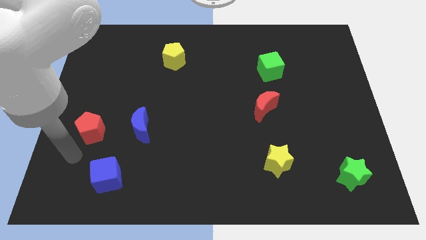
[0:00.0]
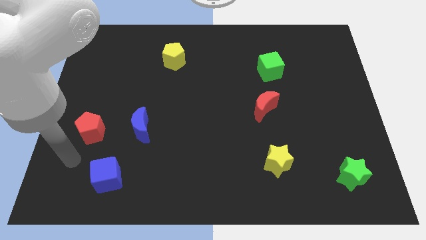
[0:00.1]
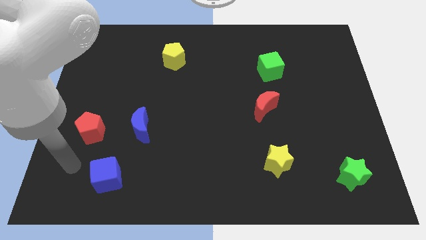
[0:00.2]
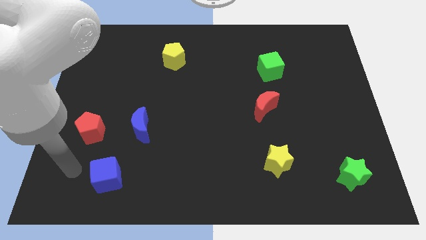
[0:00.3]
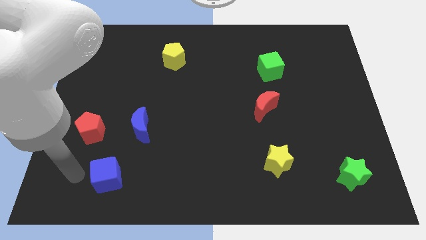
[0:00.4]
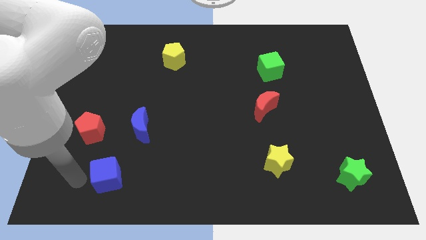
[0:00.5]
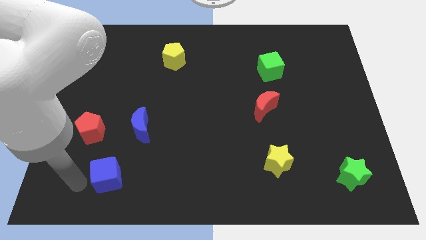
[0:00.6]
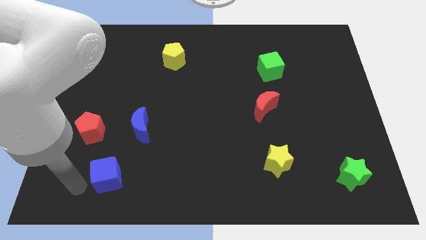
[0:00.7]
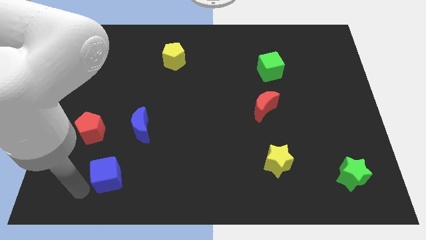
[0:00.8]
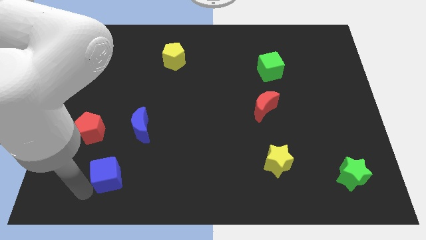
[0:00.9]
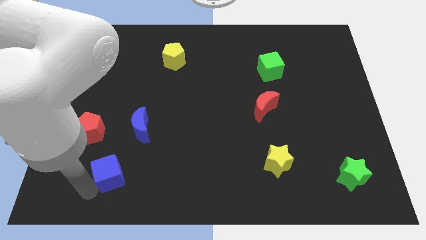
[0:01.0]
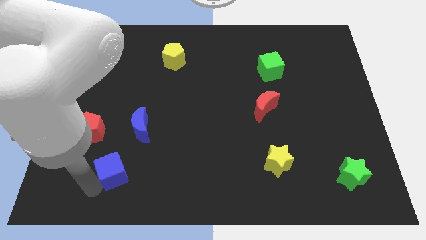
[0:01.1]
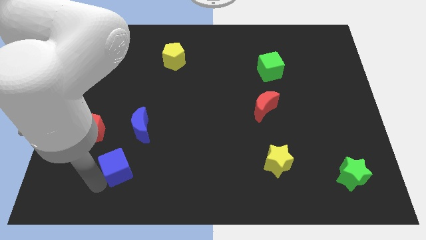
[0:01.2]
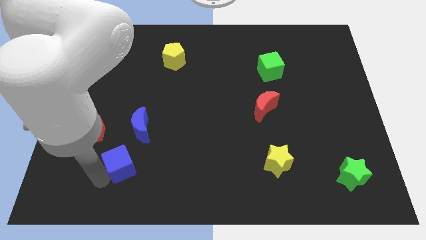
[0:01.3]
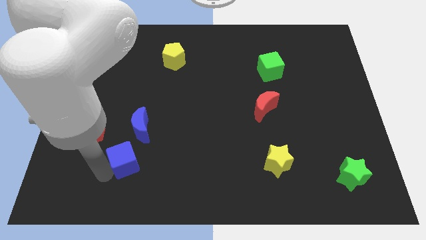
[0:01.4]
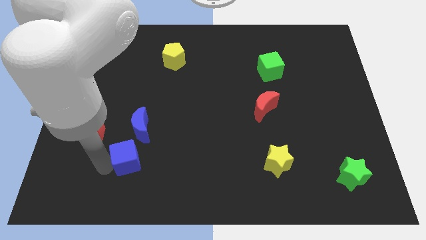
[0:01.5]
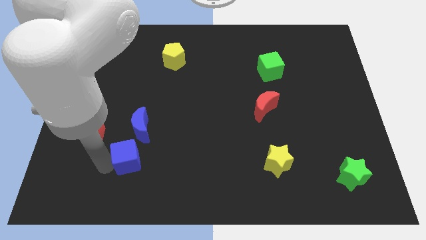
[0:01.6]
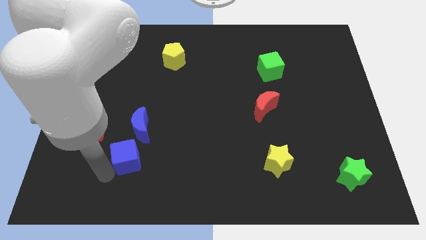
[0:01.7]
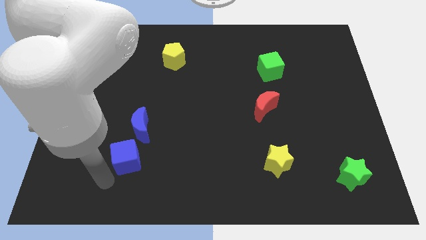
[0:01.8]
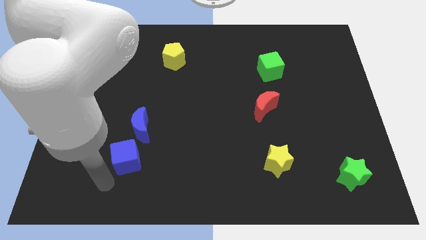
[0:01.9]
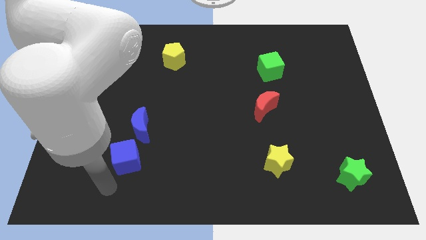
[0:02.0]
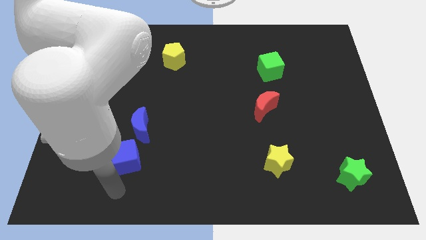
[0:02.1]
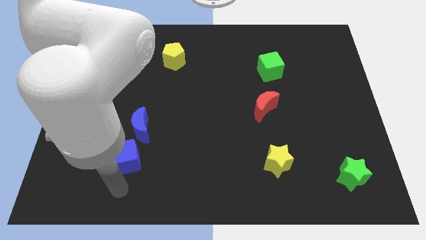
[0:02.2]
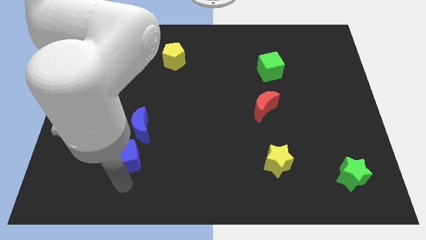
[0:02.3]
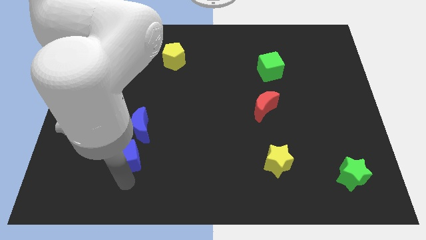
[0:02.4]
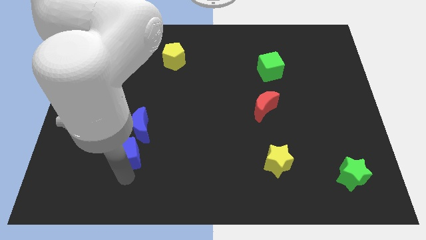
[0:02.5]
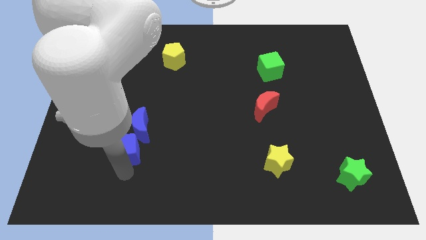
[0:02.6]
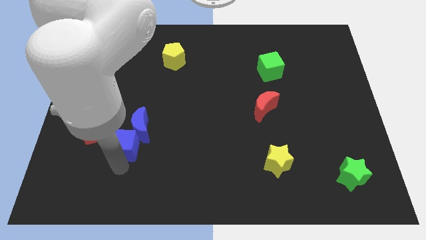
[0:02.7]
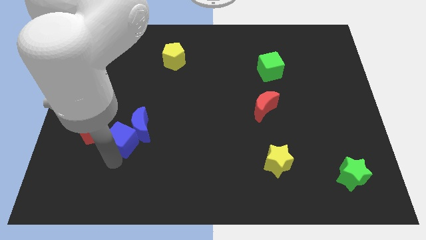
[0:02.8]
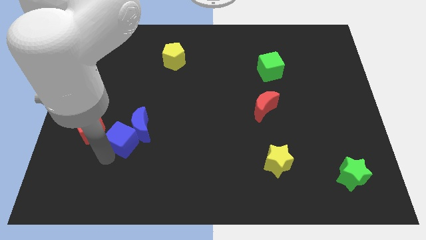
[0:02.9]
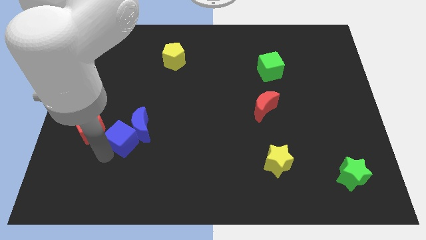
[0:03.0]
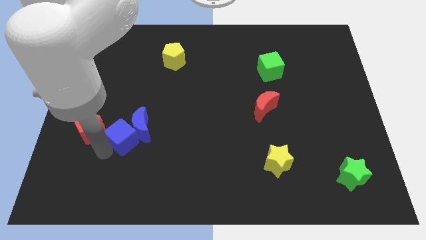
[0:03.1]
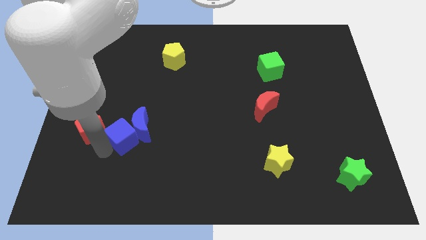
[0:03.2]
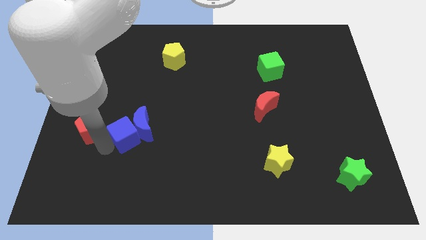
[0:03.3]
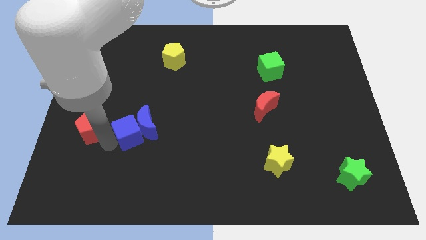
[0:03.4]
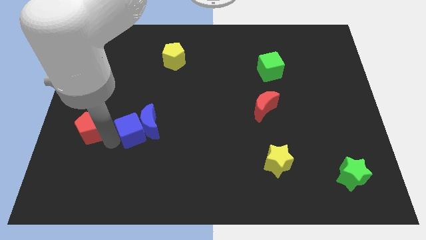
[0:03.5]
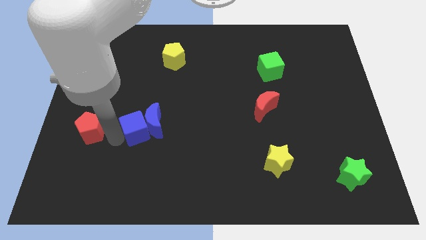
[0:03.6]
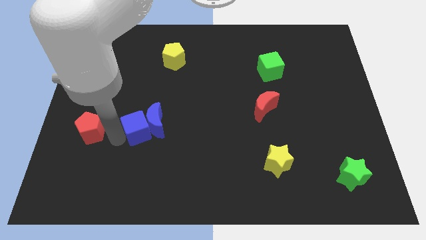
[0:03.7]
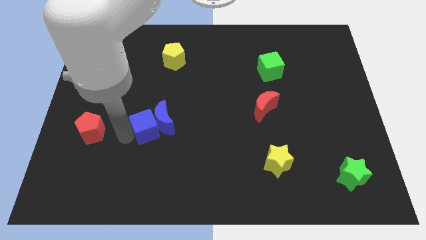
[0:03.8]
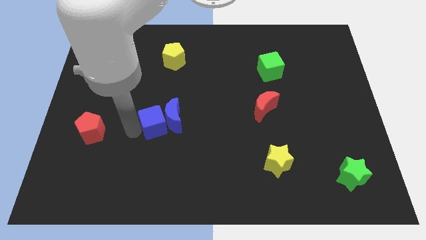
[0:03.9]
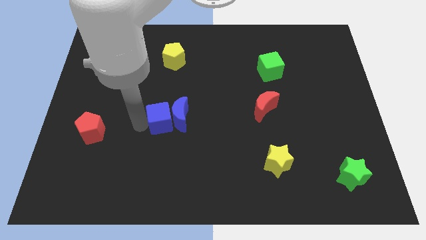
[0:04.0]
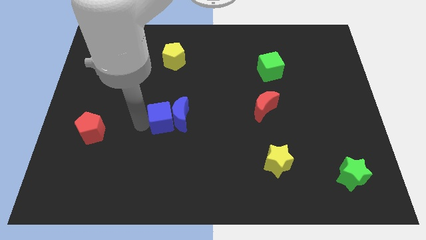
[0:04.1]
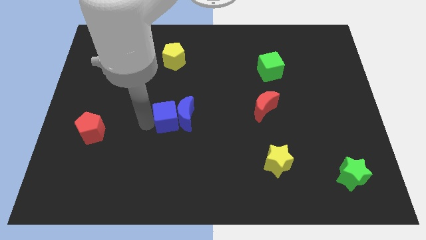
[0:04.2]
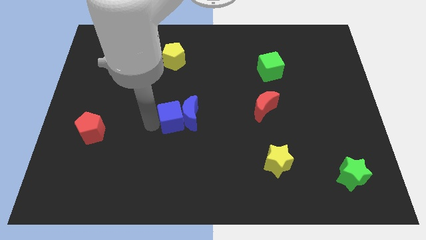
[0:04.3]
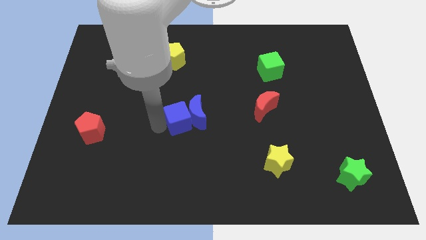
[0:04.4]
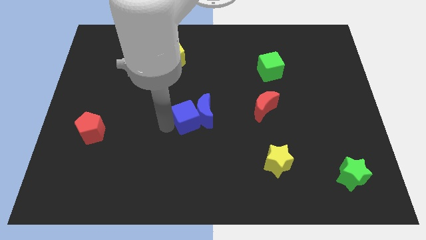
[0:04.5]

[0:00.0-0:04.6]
place the blue blocks vertically below the yellow pentagon

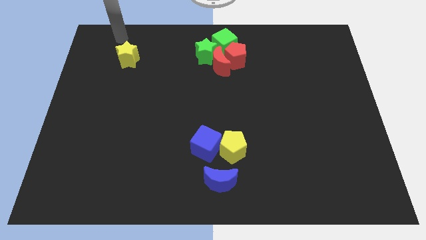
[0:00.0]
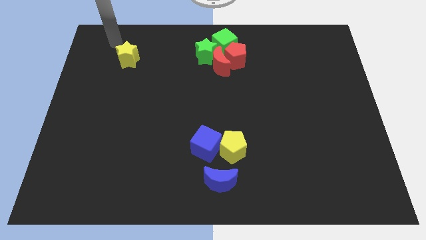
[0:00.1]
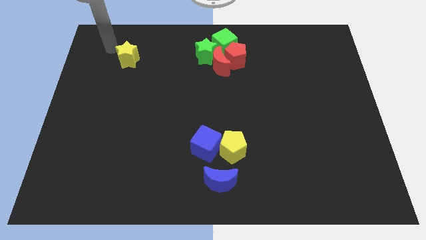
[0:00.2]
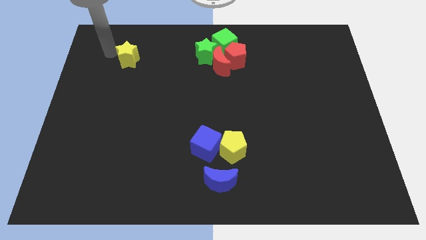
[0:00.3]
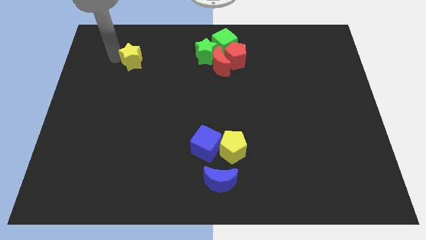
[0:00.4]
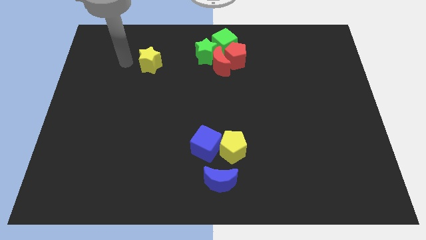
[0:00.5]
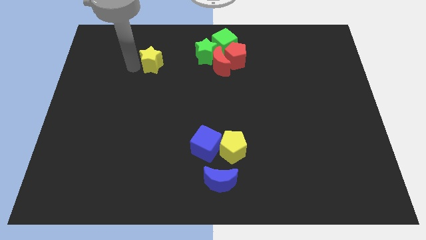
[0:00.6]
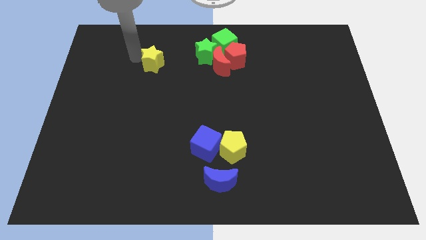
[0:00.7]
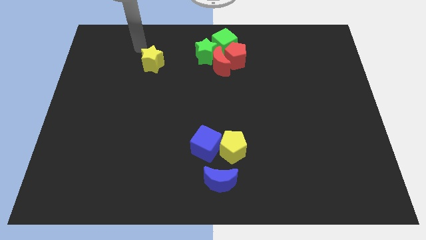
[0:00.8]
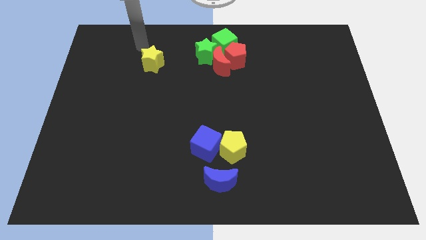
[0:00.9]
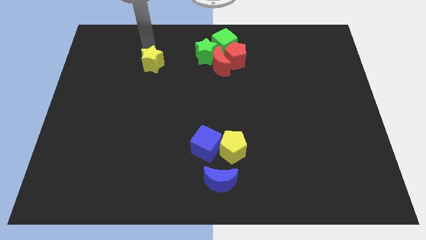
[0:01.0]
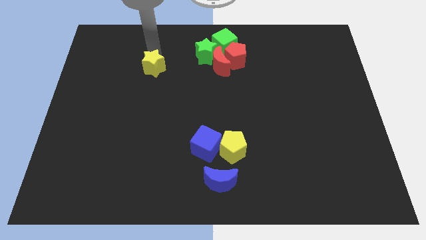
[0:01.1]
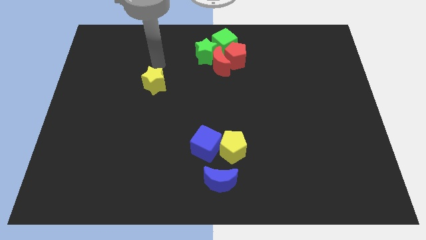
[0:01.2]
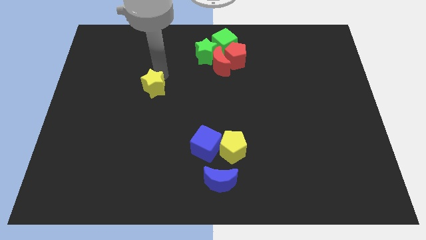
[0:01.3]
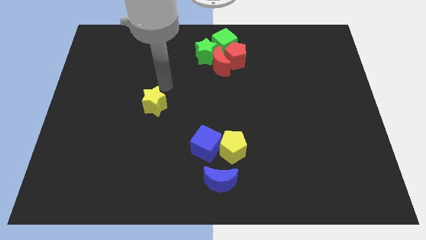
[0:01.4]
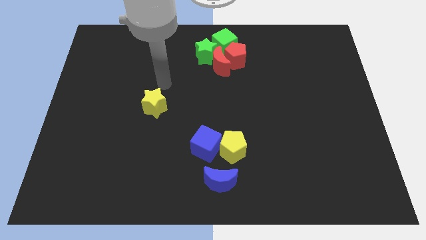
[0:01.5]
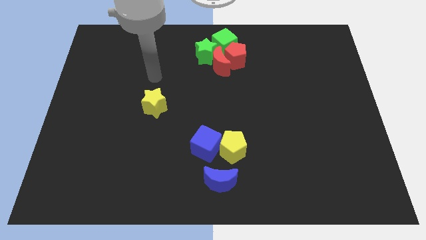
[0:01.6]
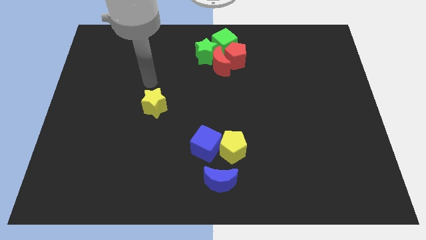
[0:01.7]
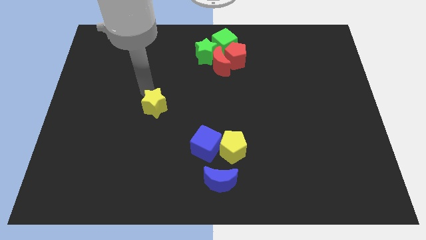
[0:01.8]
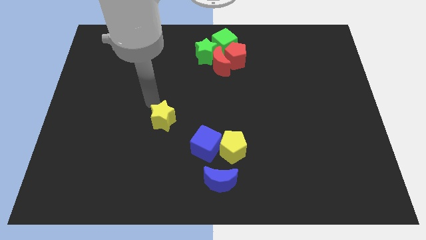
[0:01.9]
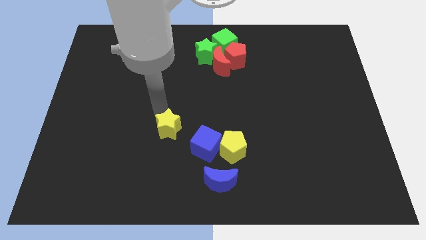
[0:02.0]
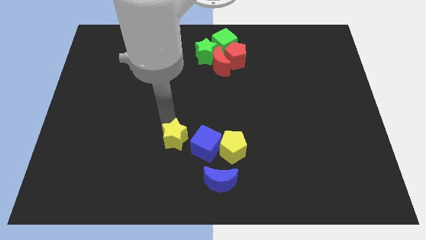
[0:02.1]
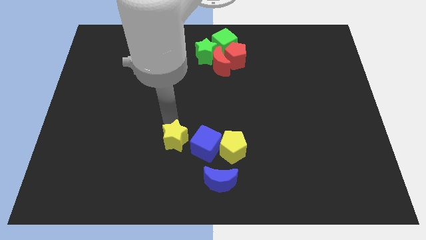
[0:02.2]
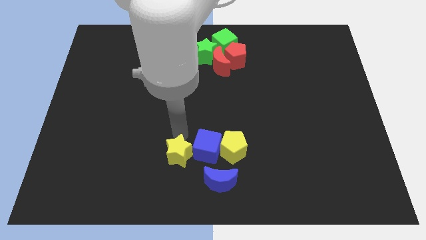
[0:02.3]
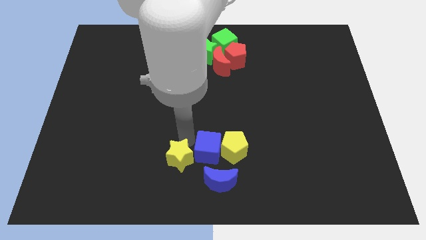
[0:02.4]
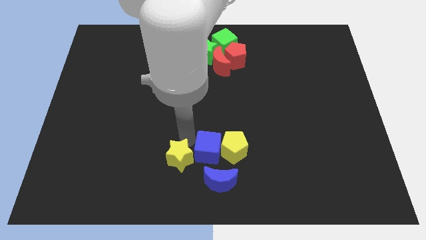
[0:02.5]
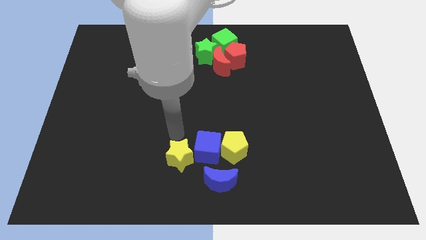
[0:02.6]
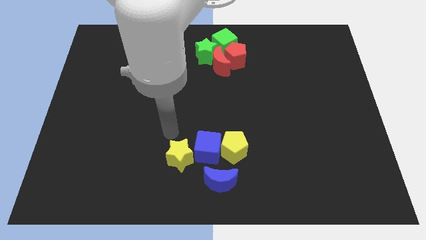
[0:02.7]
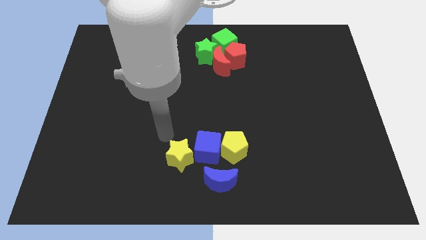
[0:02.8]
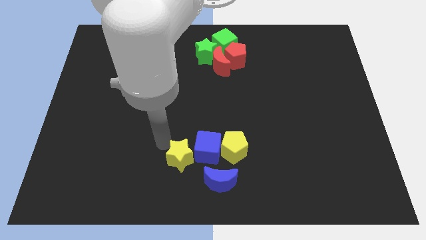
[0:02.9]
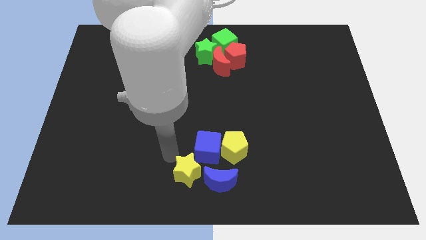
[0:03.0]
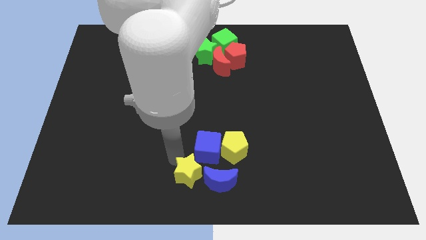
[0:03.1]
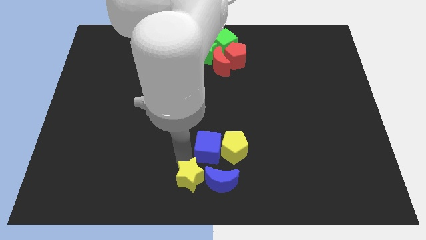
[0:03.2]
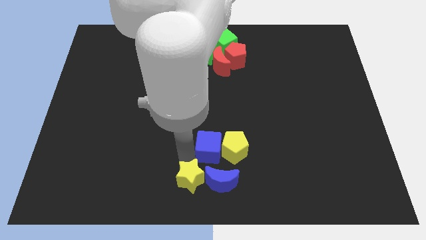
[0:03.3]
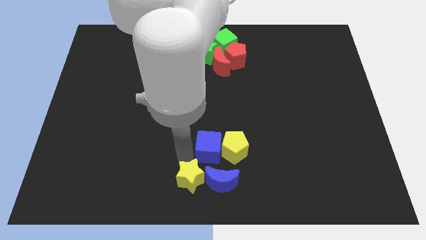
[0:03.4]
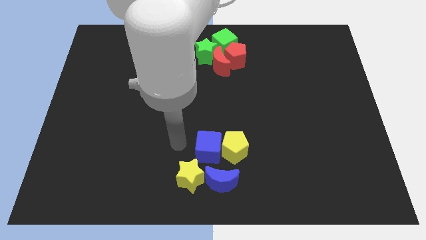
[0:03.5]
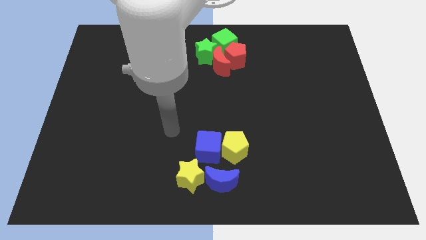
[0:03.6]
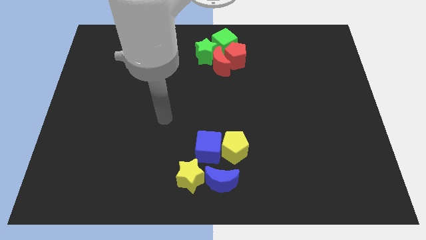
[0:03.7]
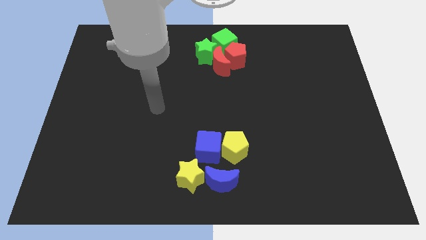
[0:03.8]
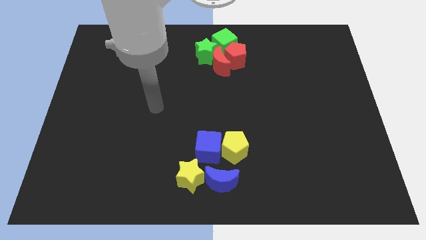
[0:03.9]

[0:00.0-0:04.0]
place the yellow star left to the blue moon

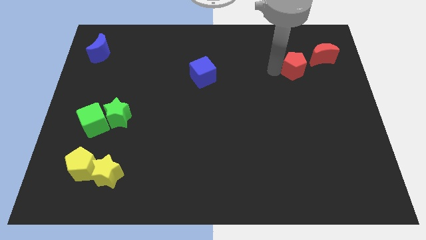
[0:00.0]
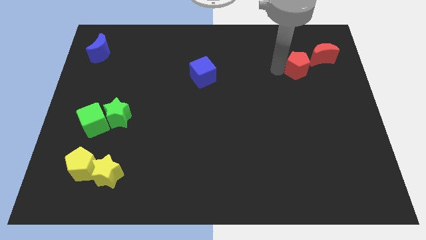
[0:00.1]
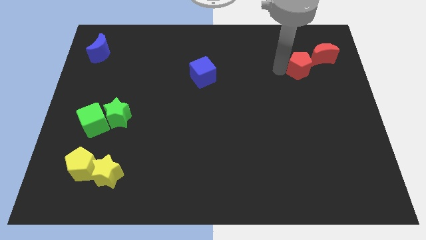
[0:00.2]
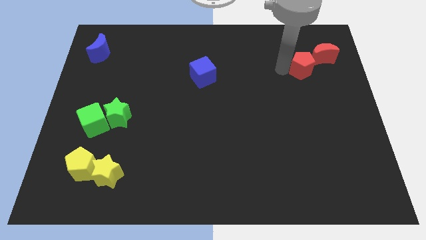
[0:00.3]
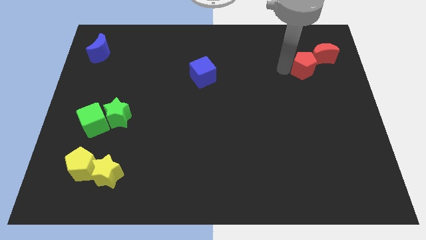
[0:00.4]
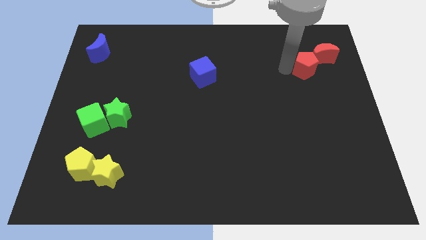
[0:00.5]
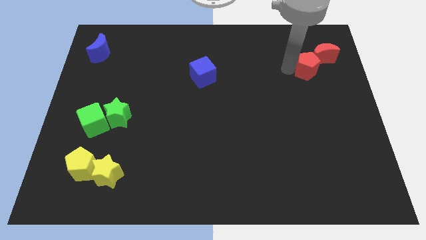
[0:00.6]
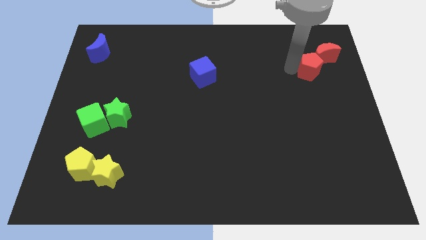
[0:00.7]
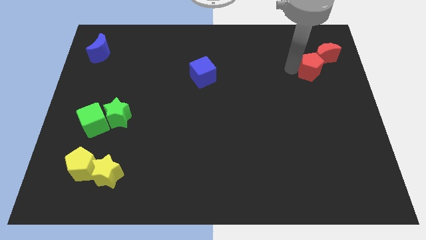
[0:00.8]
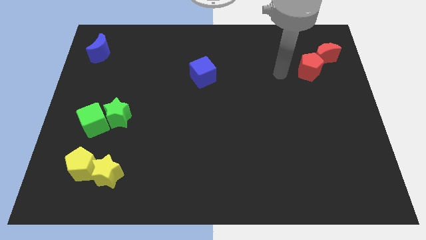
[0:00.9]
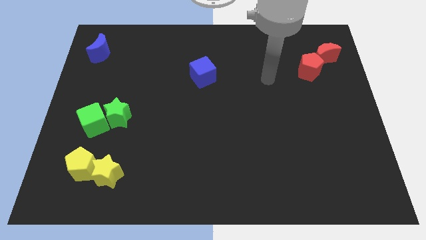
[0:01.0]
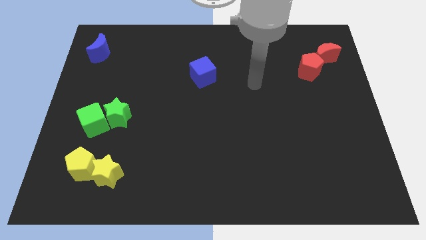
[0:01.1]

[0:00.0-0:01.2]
push red pentagon in to red crescent
